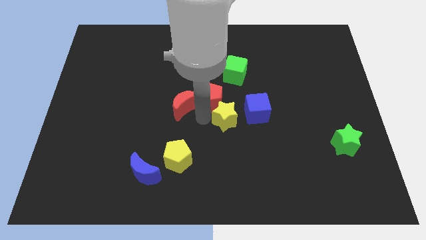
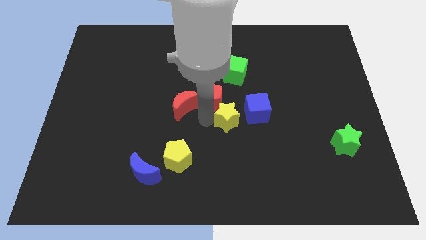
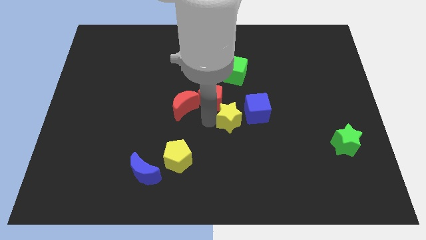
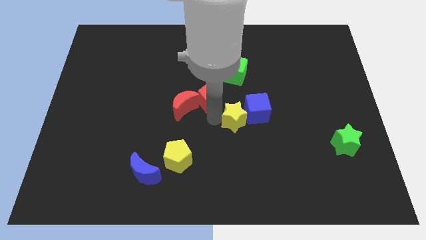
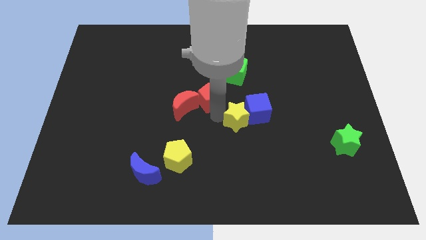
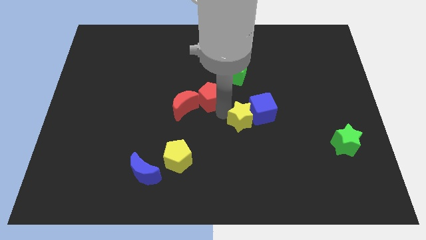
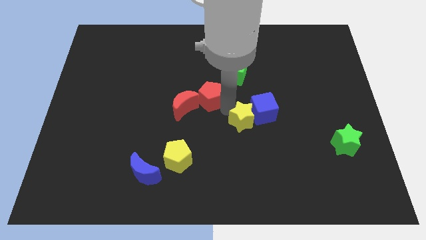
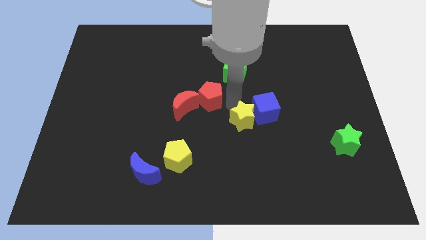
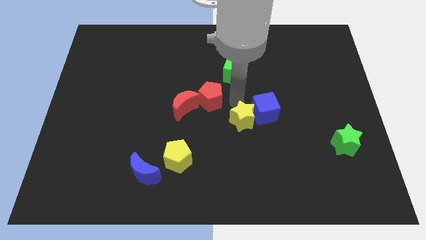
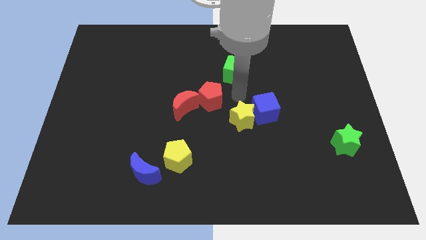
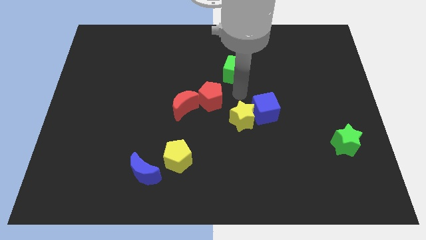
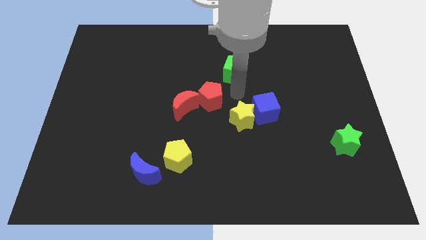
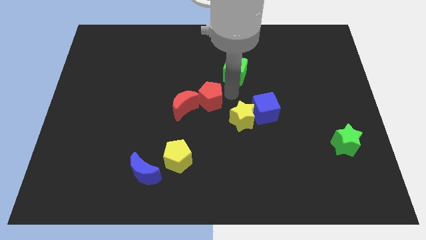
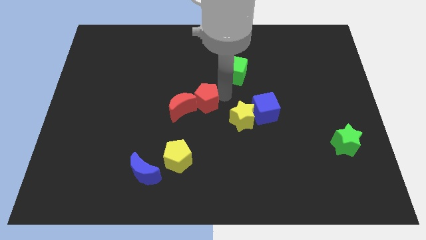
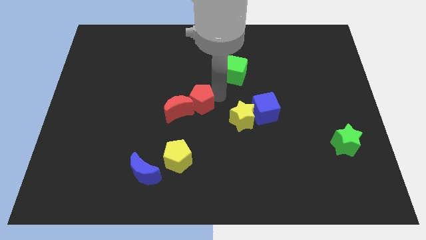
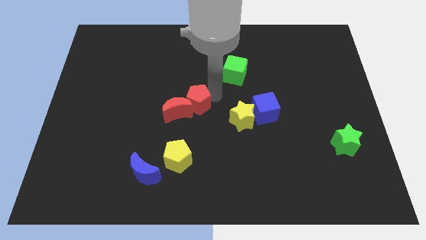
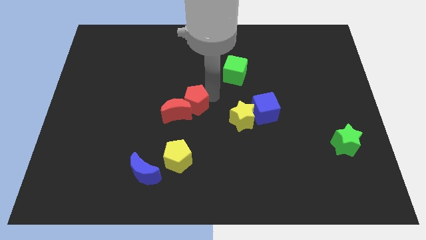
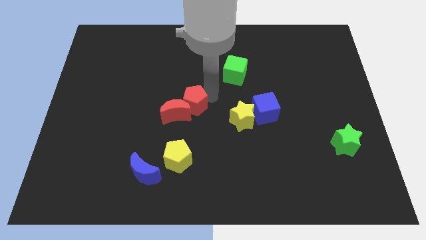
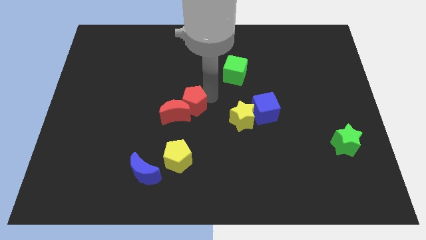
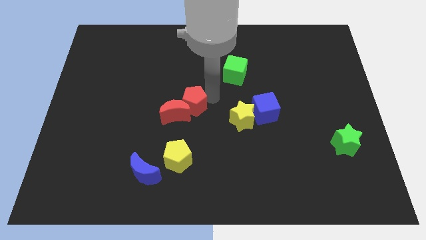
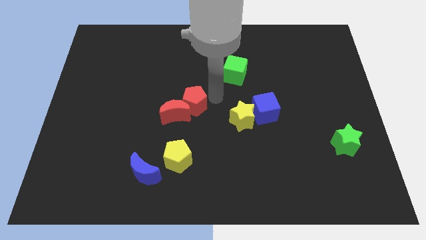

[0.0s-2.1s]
separate the yellow star and the red pentagon

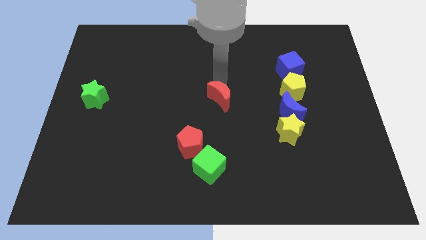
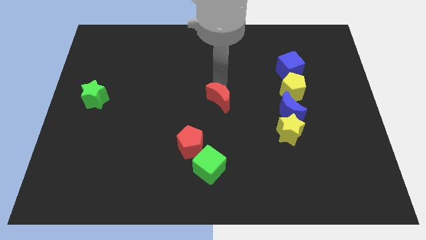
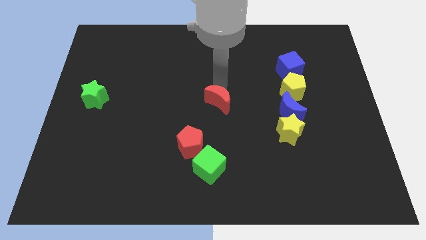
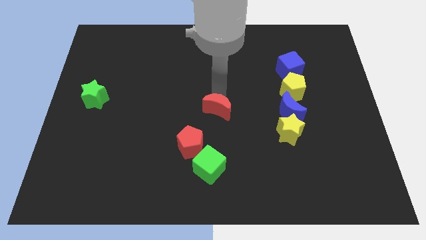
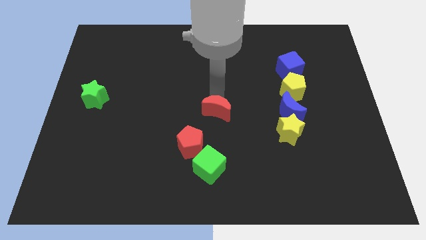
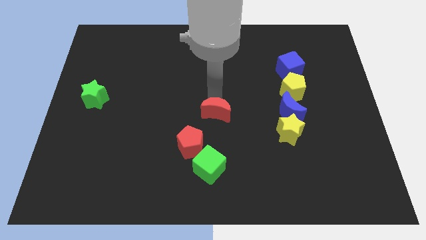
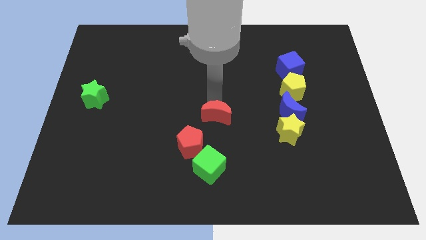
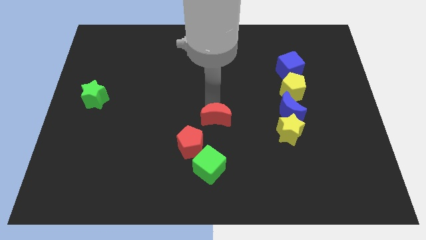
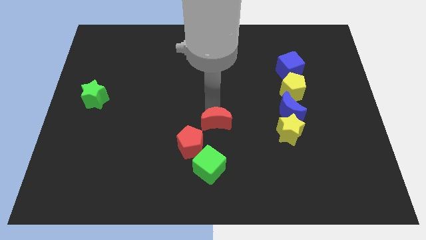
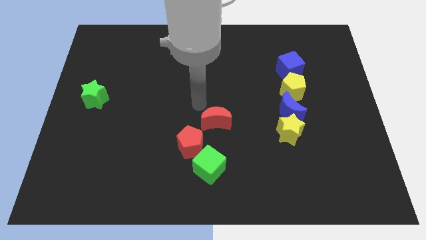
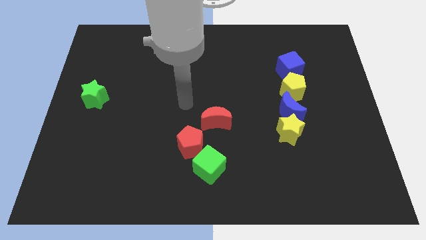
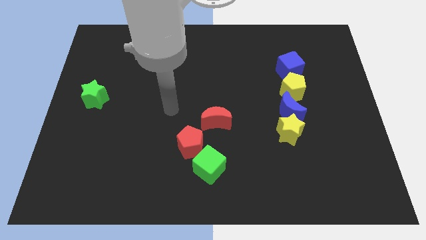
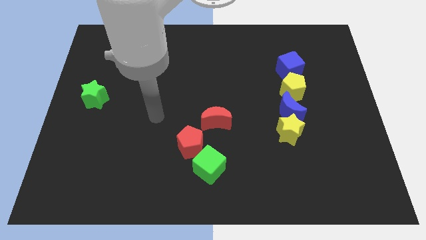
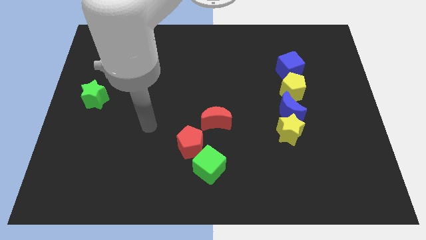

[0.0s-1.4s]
place red moon to the top of green cube

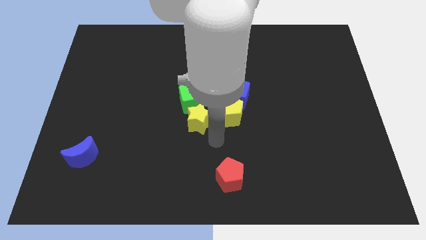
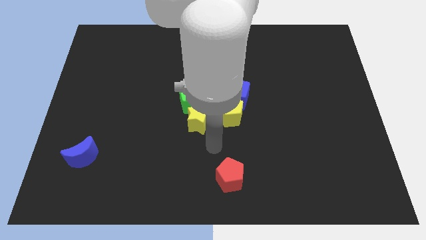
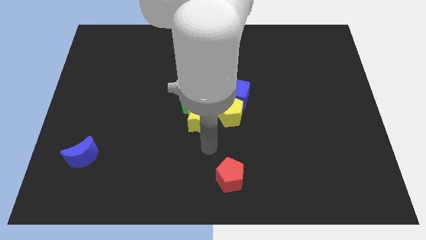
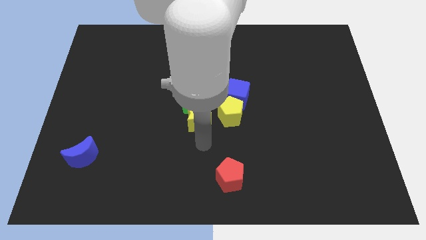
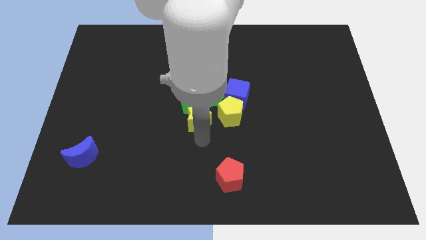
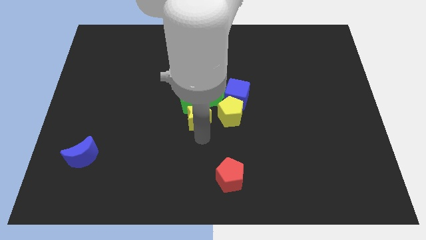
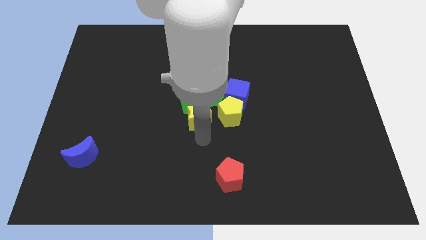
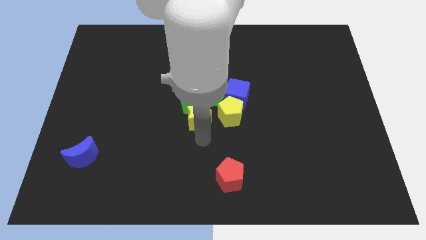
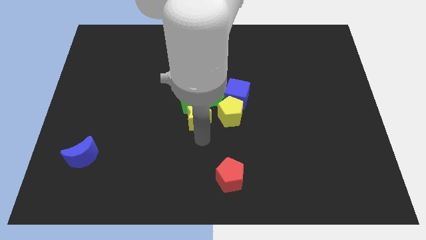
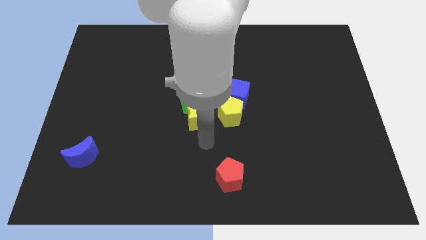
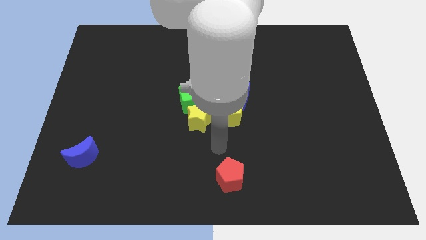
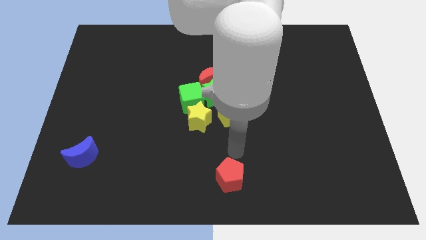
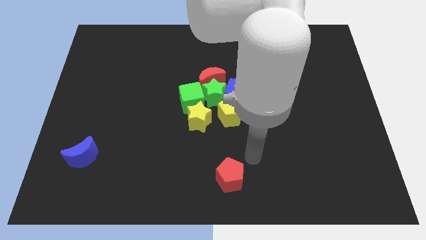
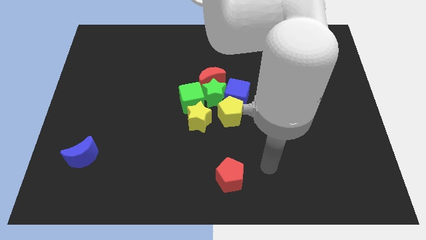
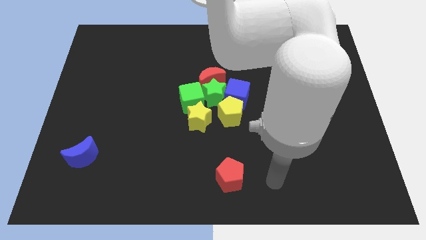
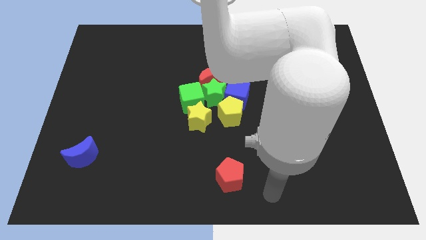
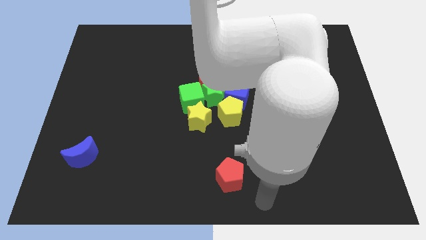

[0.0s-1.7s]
move the yellow star towards the green cube

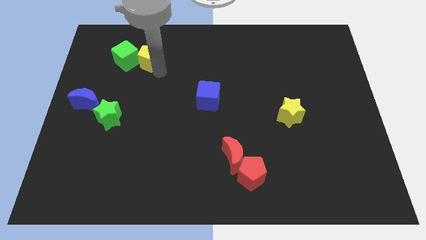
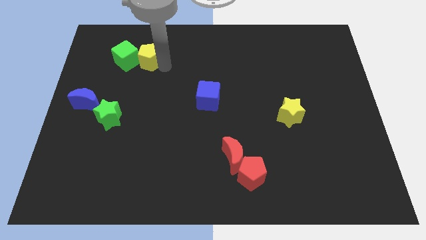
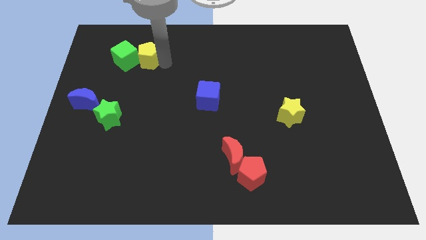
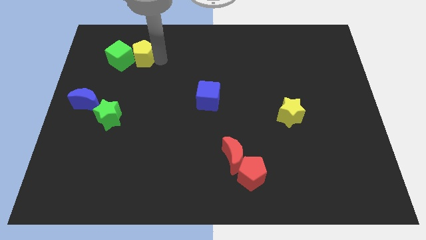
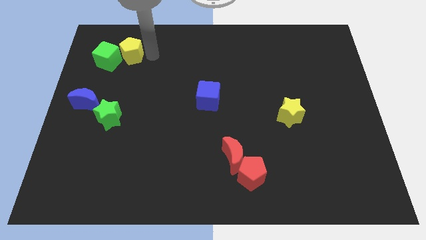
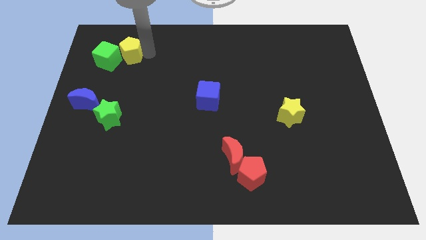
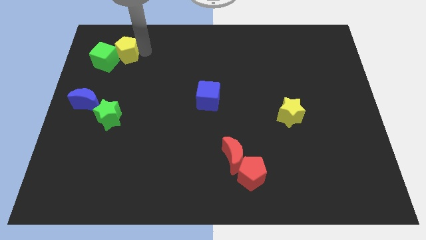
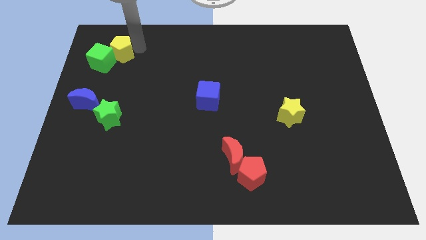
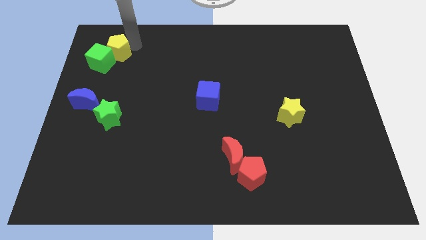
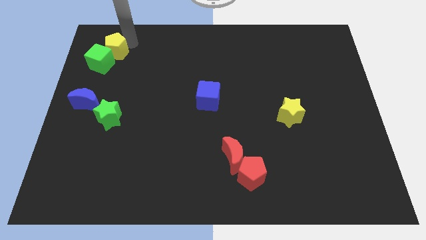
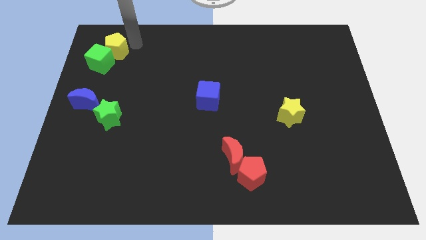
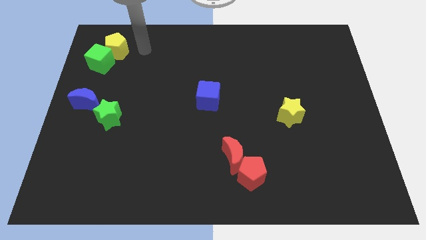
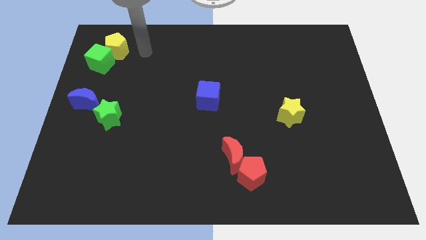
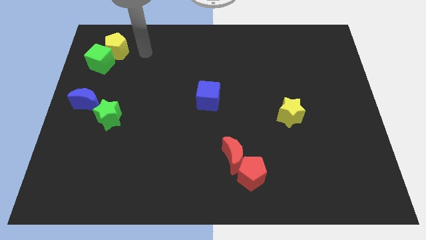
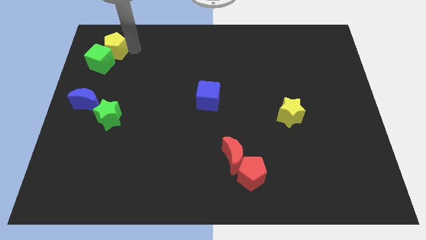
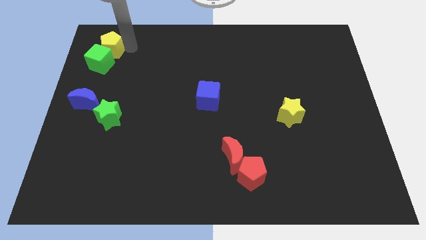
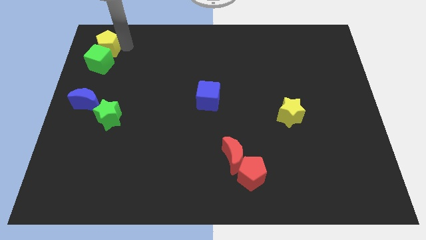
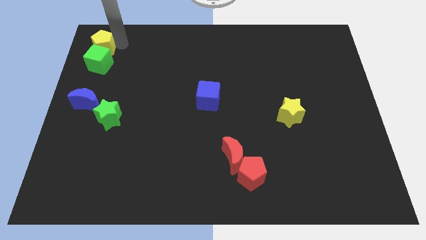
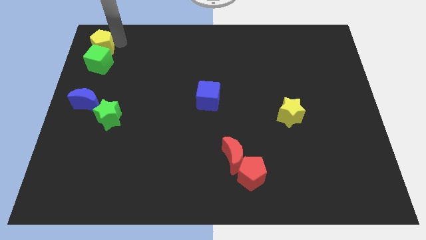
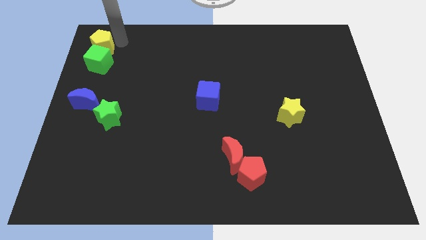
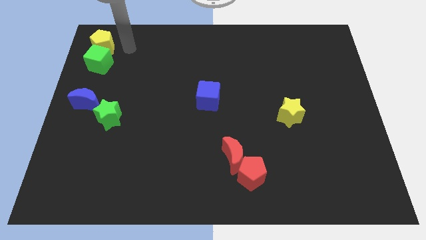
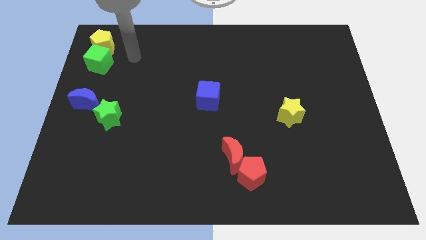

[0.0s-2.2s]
move the green cube and yellow pentagon to the top left side of the board

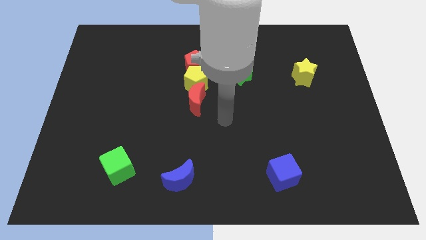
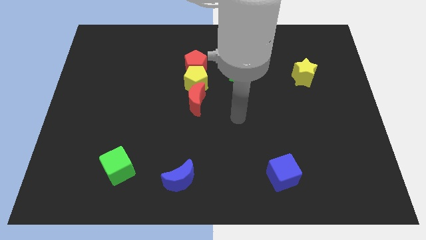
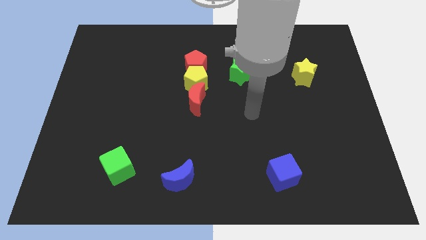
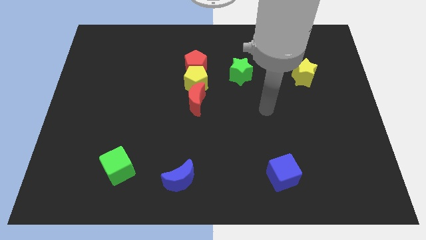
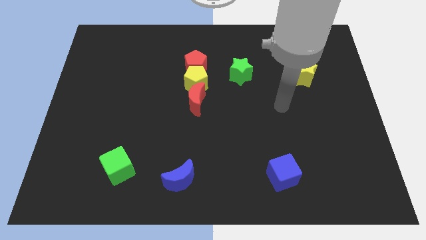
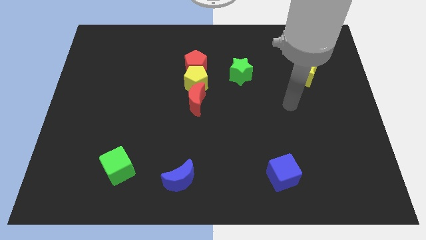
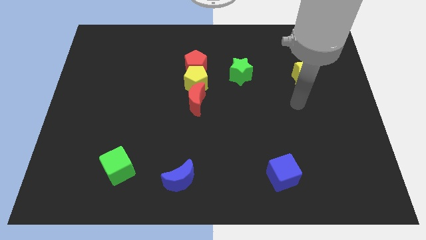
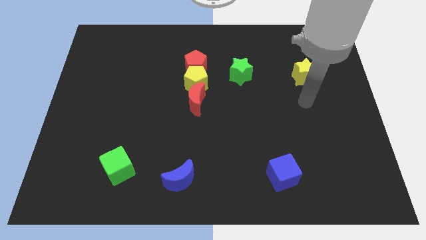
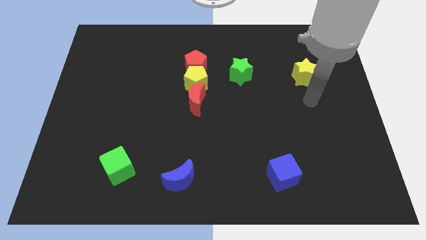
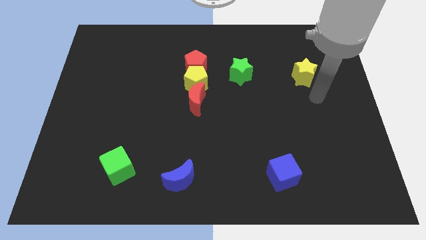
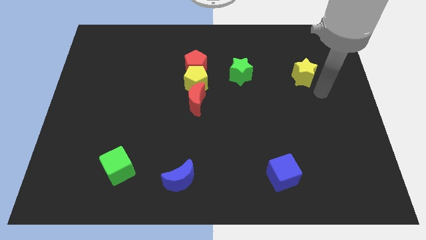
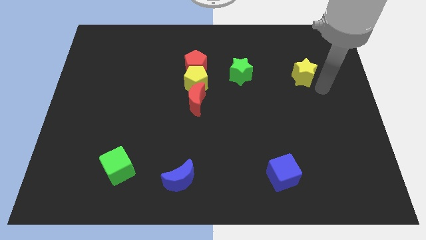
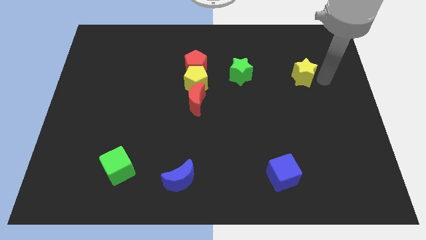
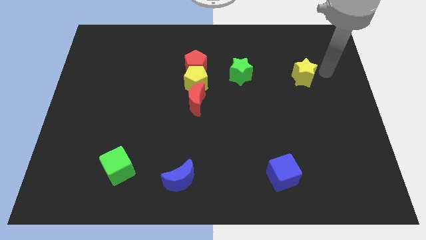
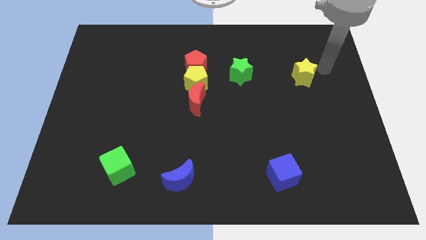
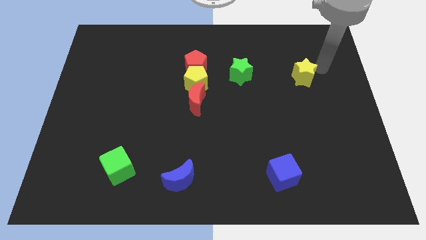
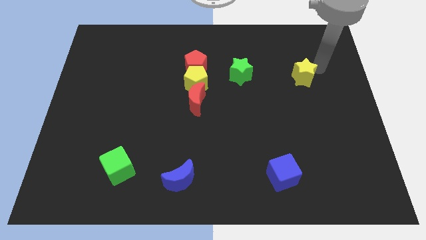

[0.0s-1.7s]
move the arm towards the yellow star
